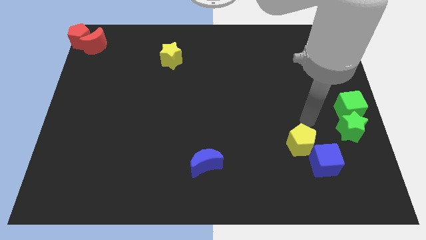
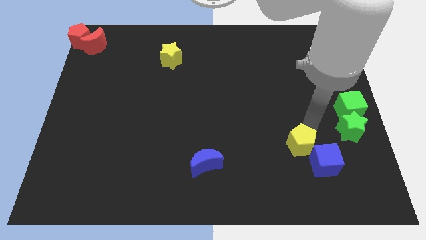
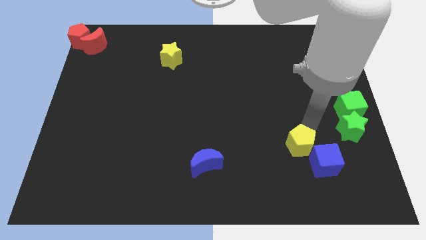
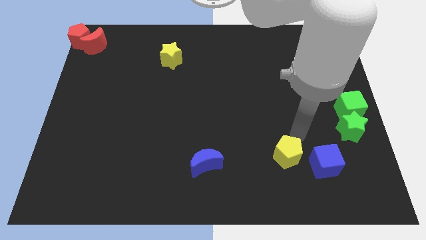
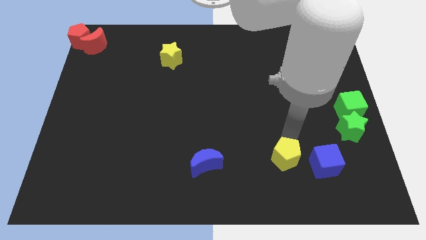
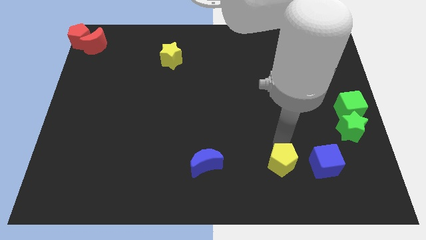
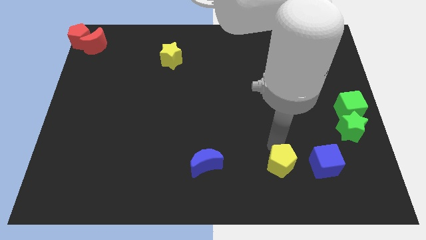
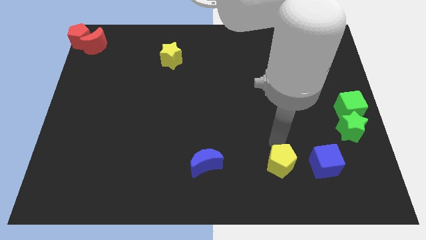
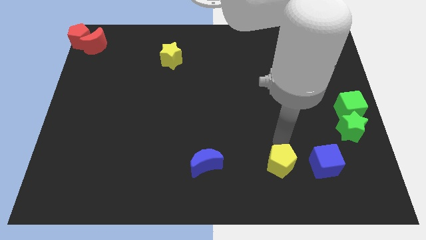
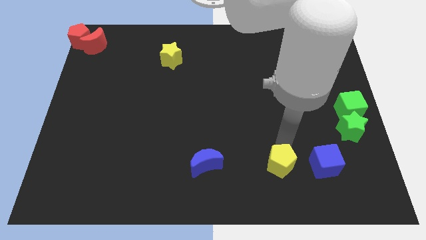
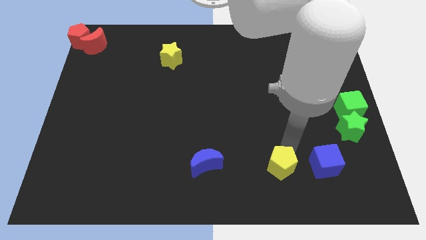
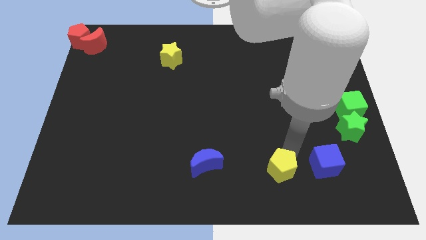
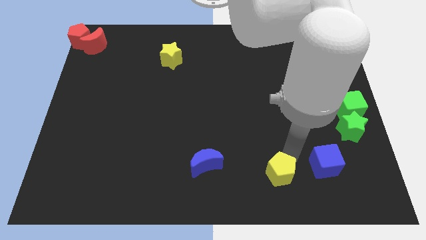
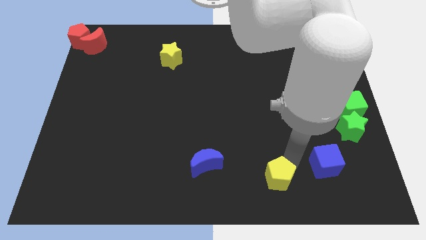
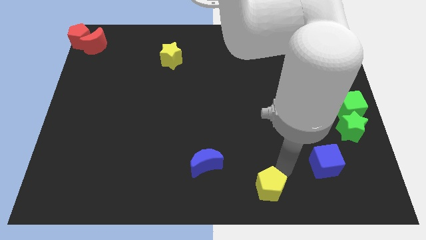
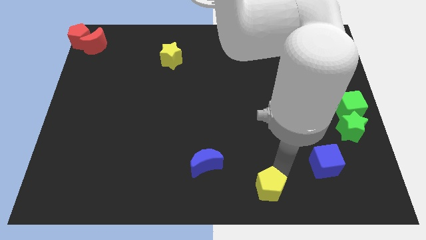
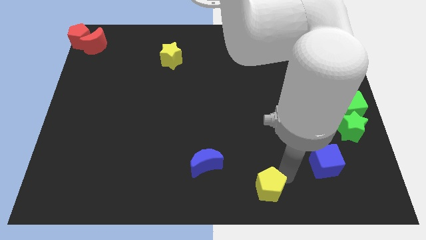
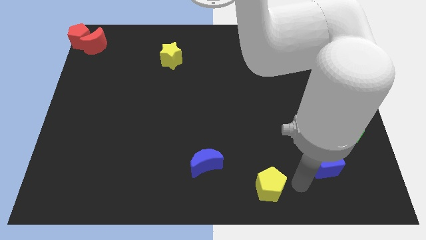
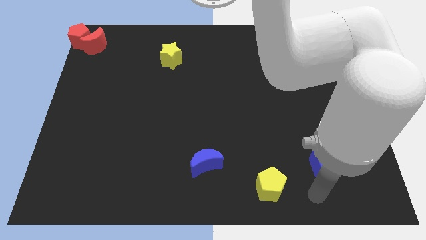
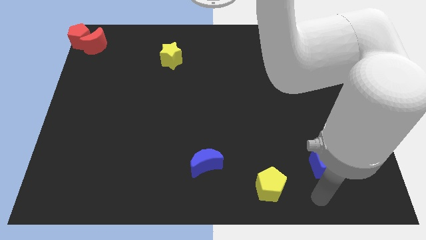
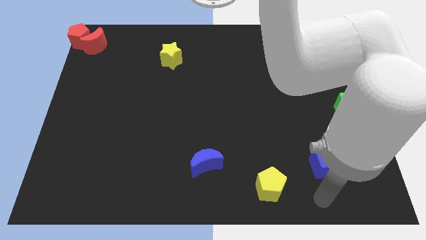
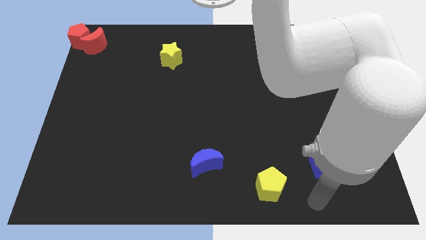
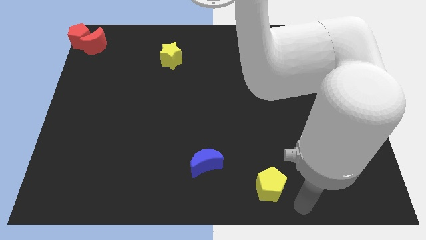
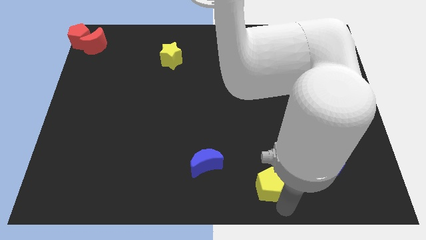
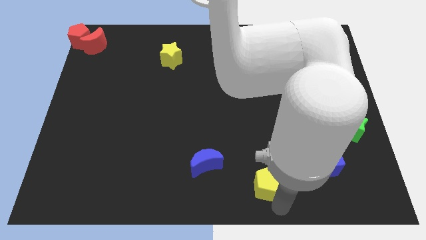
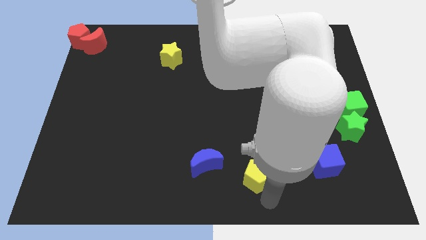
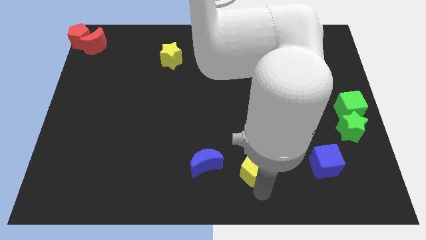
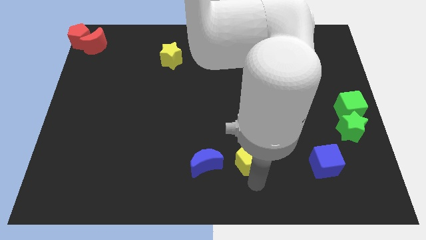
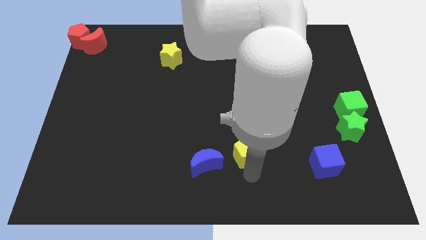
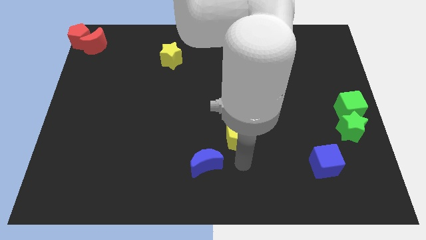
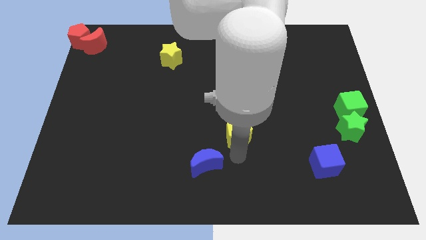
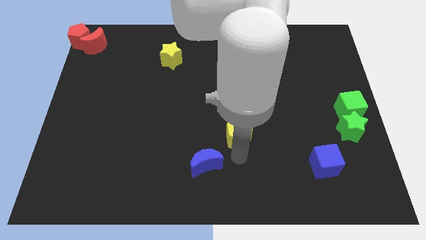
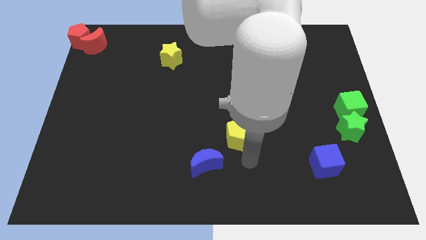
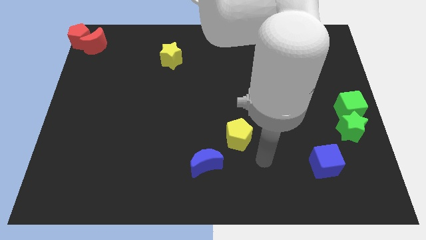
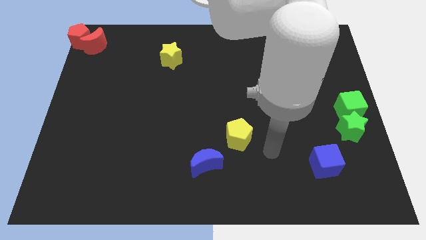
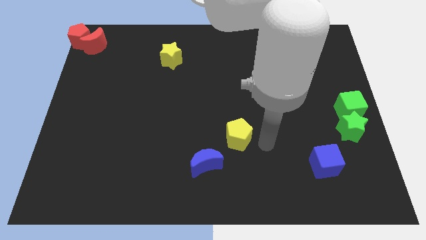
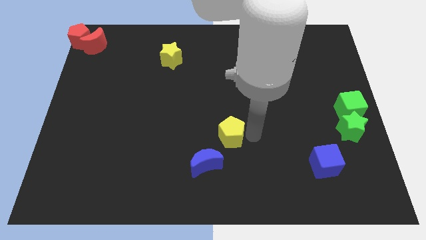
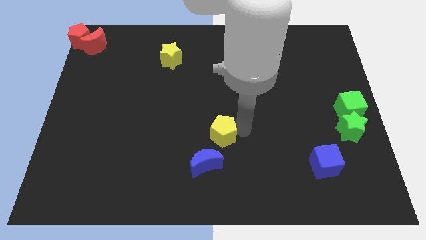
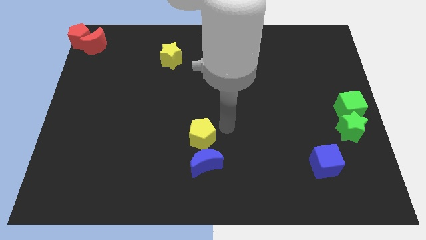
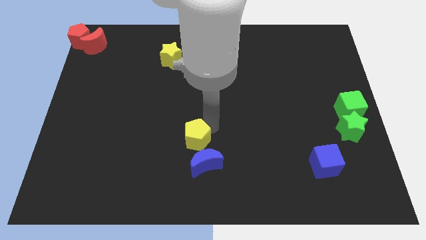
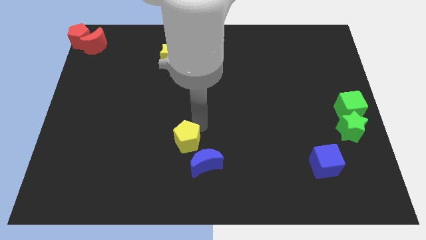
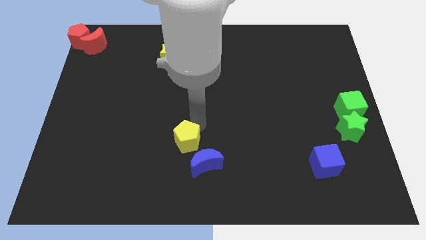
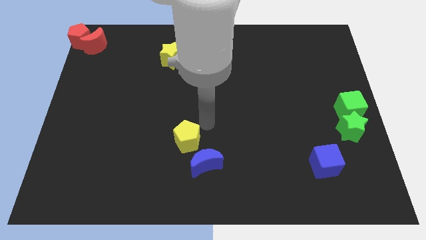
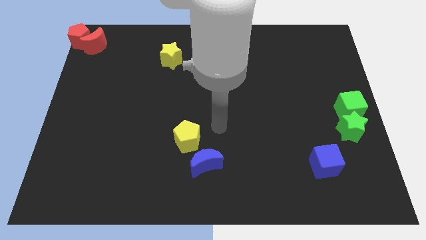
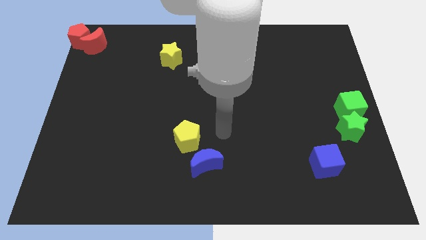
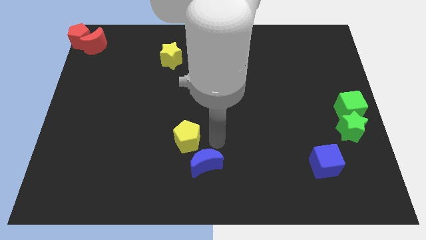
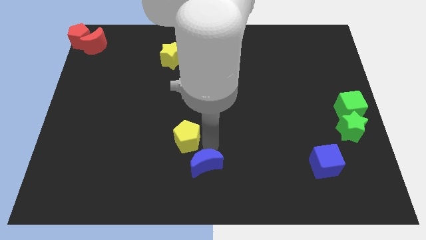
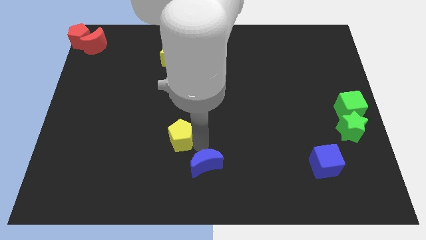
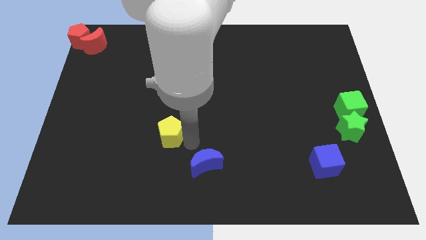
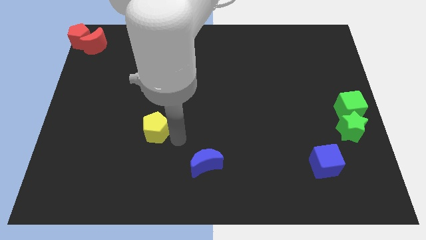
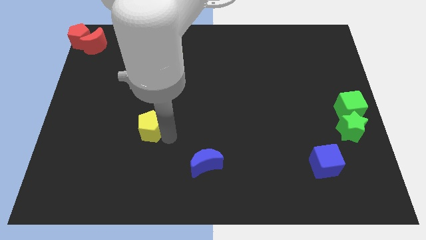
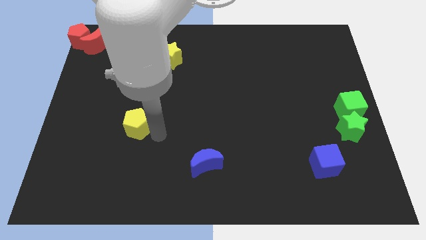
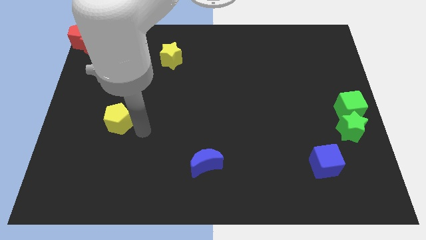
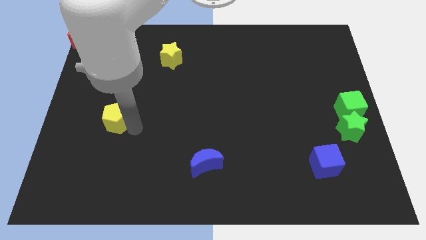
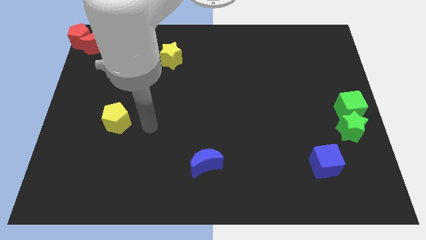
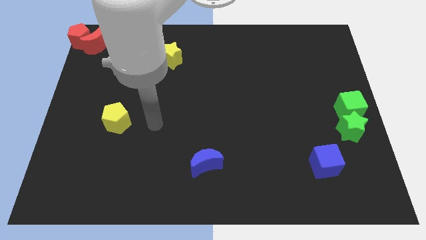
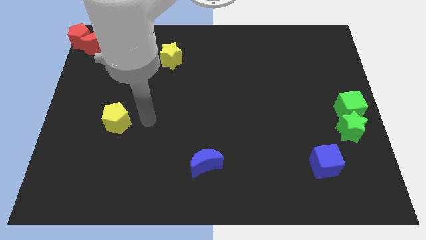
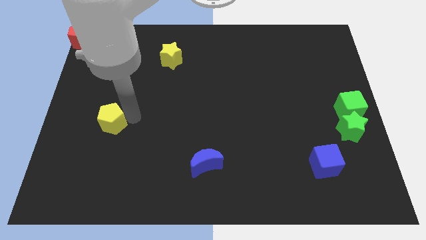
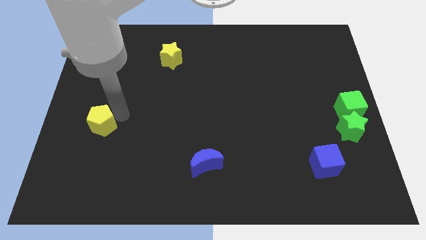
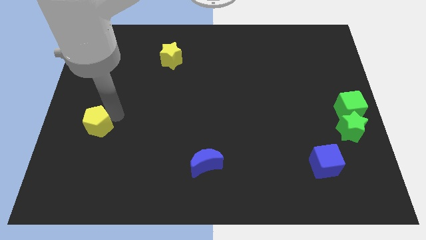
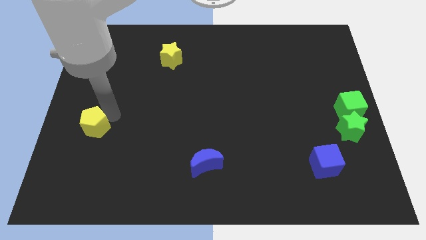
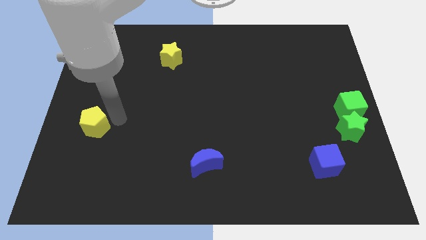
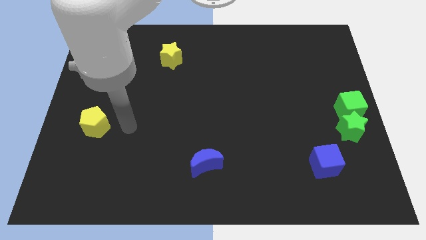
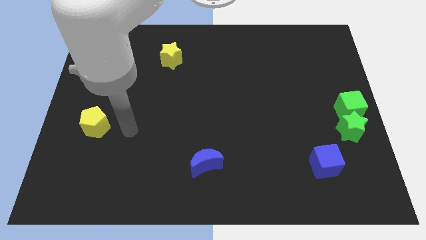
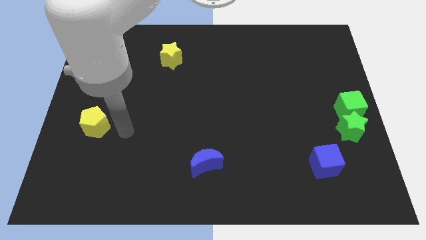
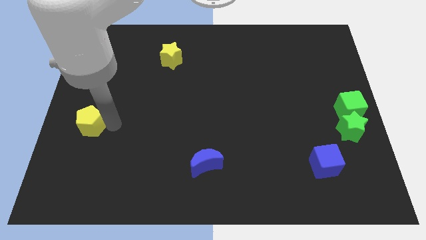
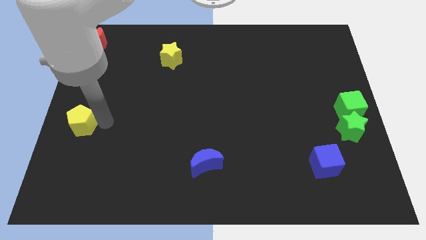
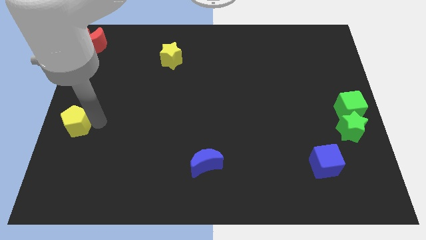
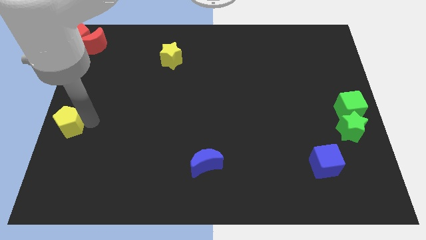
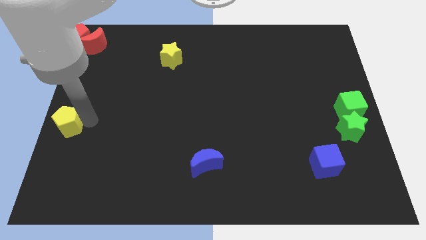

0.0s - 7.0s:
place the yellow pentagon to the center left of the board

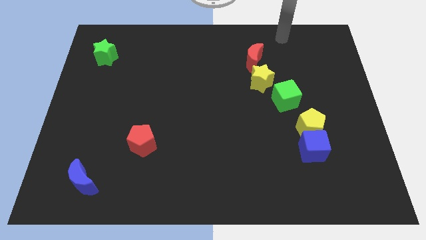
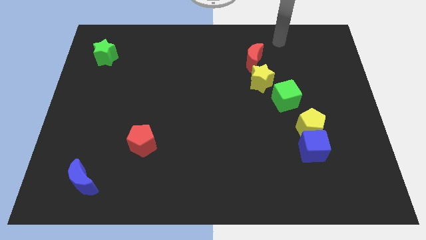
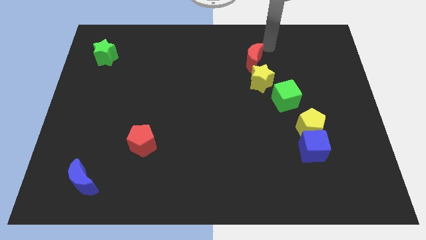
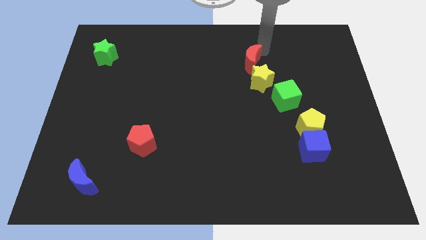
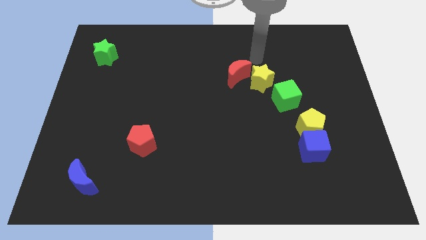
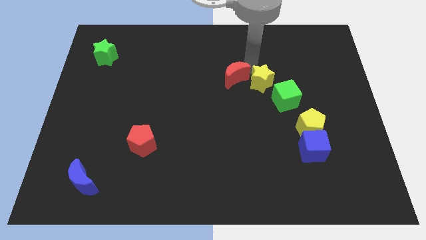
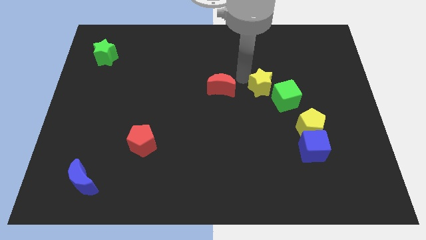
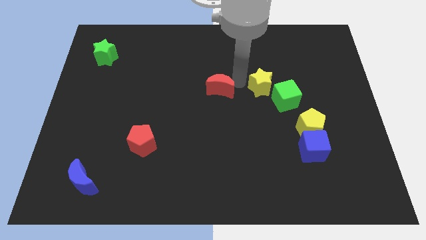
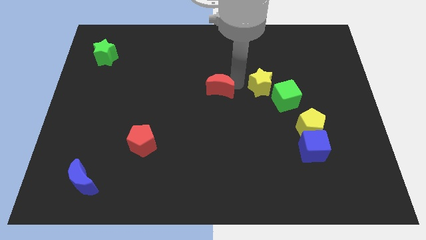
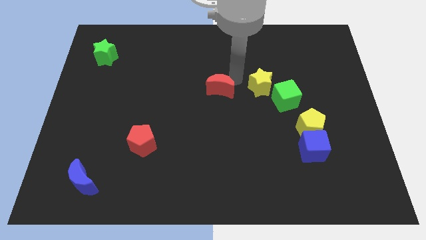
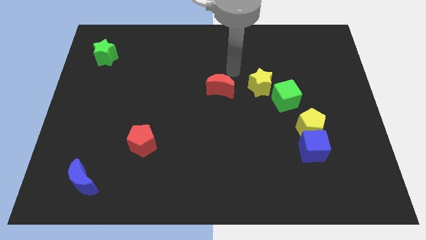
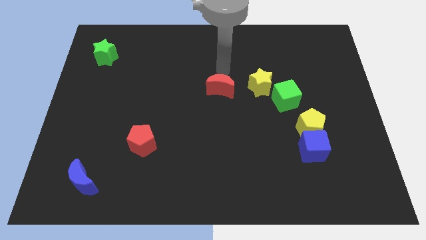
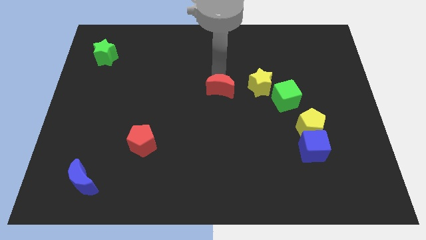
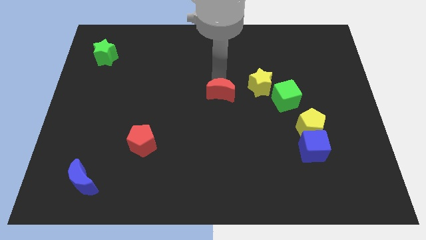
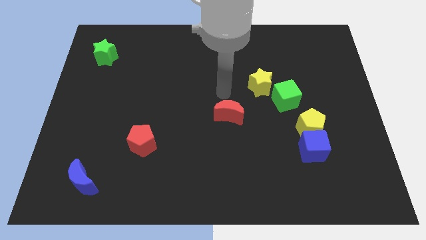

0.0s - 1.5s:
move red moon away from the yellow star

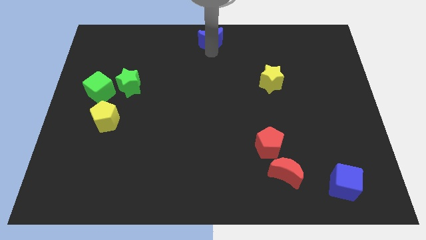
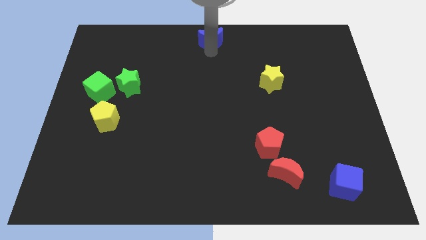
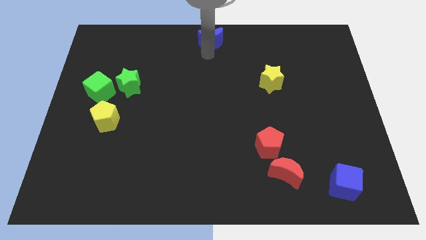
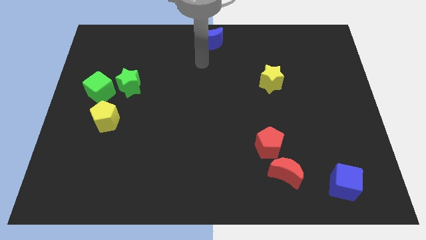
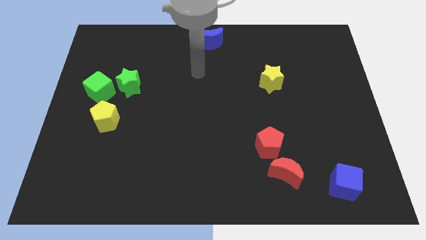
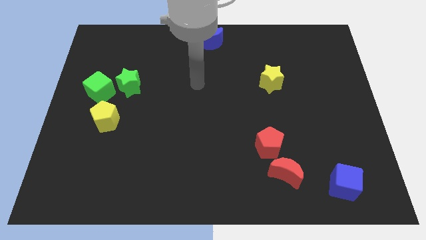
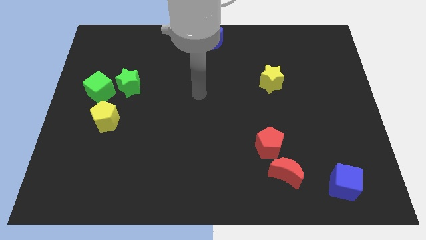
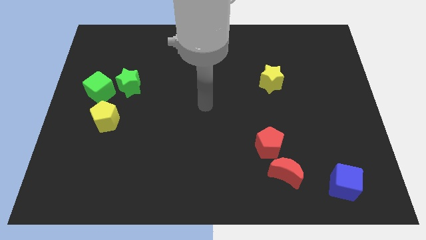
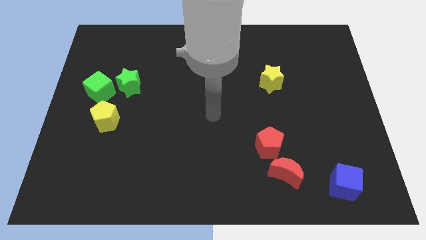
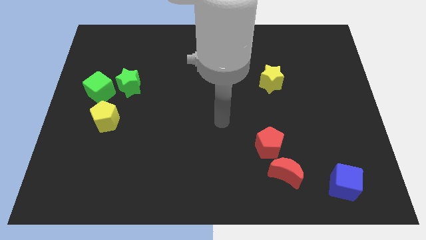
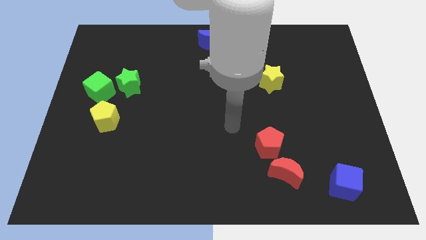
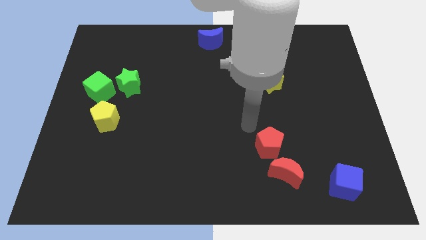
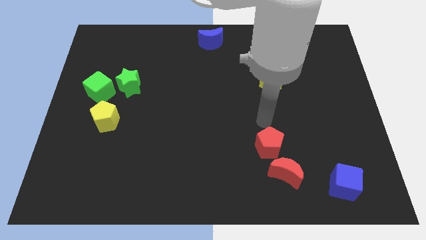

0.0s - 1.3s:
move your arm away from the blue moon
